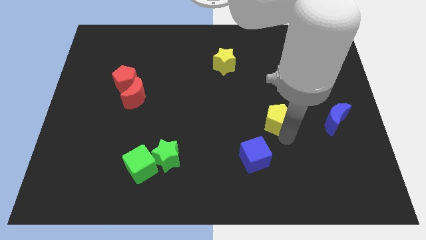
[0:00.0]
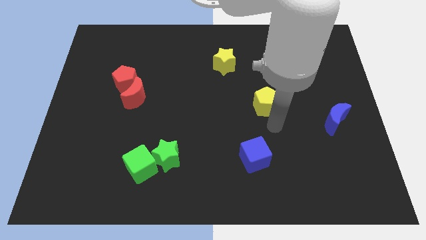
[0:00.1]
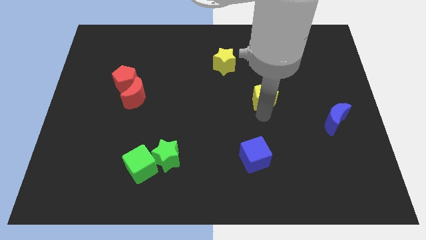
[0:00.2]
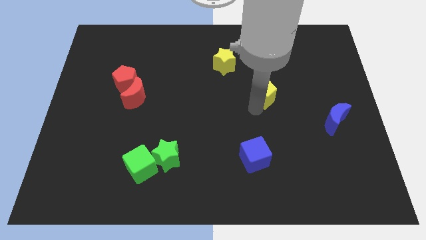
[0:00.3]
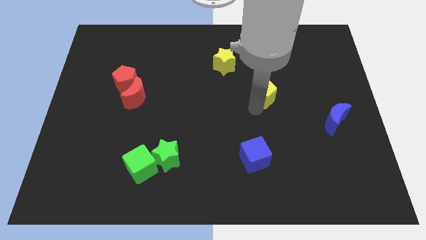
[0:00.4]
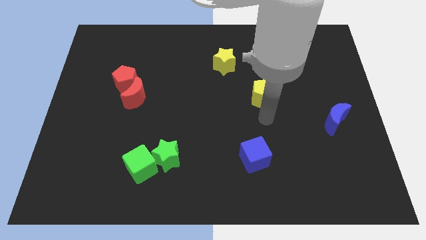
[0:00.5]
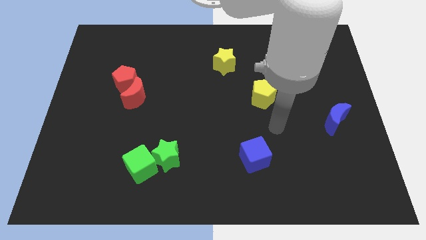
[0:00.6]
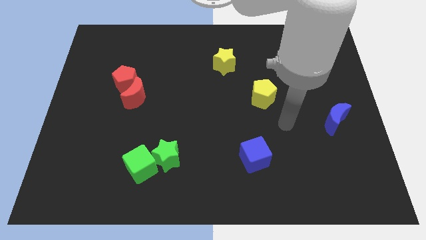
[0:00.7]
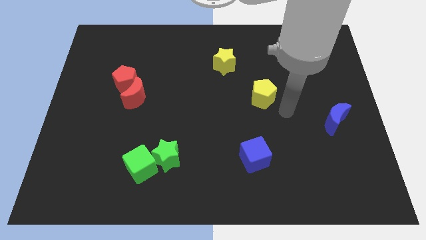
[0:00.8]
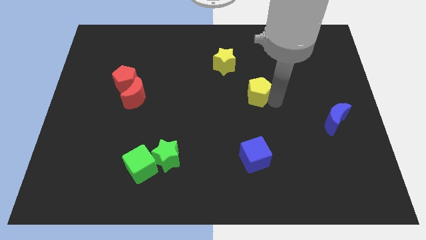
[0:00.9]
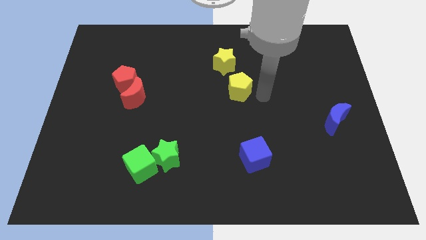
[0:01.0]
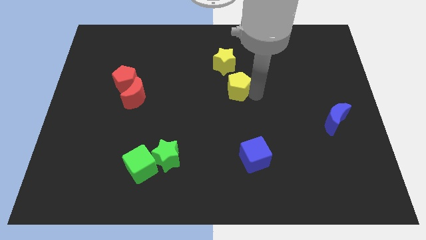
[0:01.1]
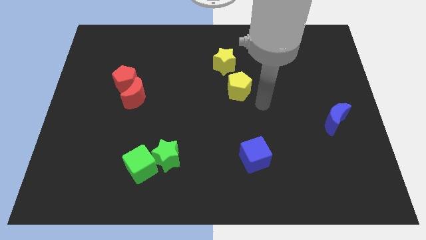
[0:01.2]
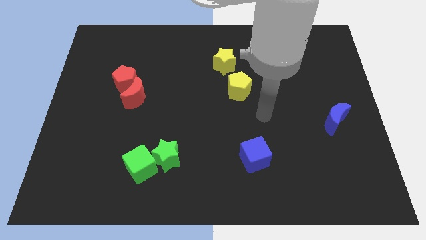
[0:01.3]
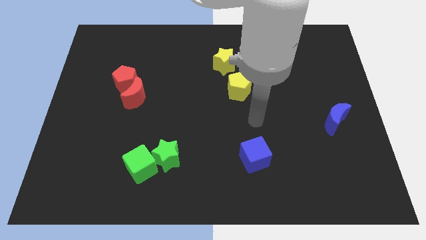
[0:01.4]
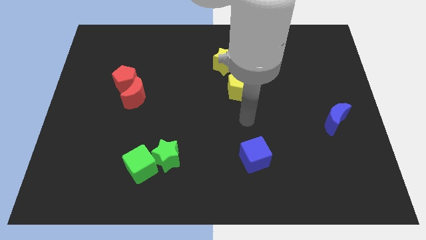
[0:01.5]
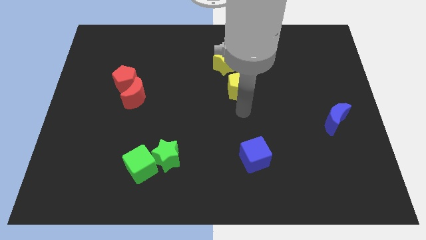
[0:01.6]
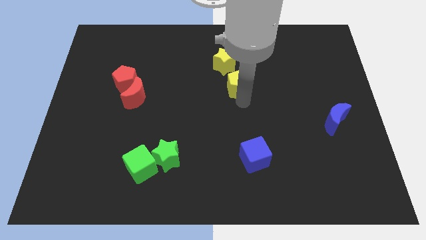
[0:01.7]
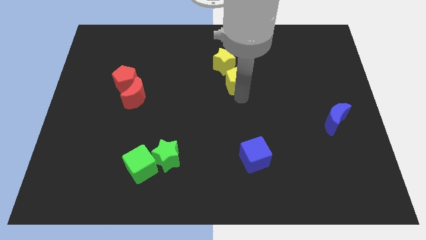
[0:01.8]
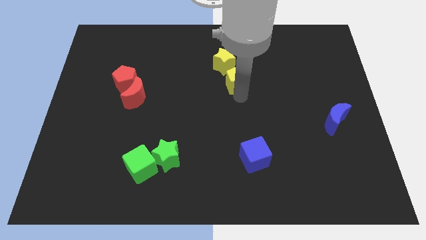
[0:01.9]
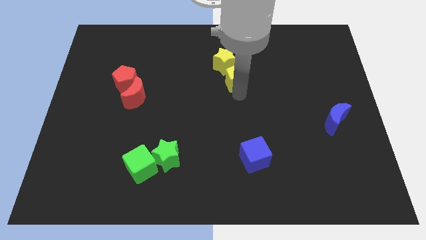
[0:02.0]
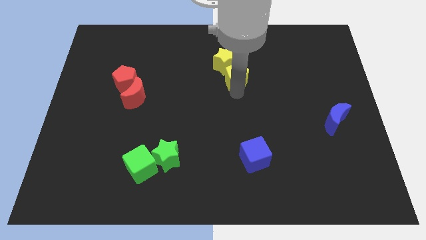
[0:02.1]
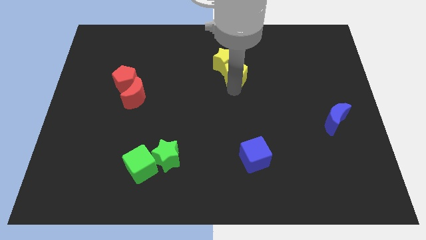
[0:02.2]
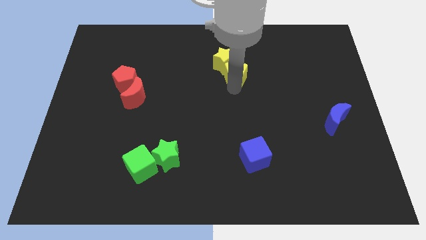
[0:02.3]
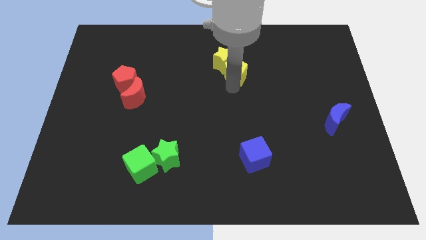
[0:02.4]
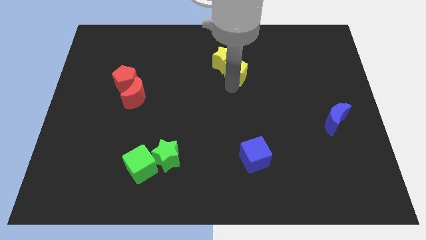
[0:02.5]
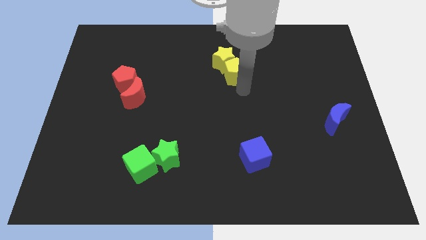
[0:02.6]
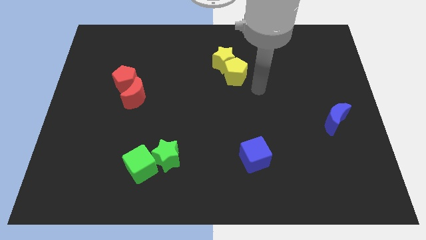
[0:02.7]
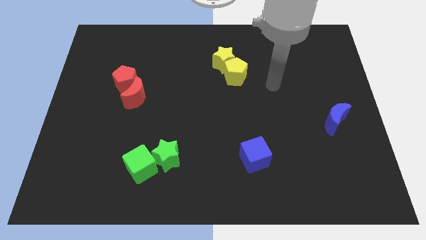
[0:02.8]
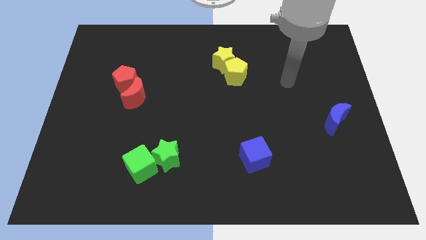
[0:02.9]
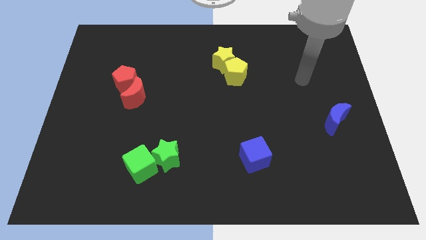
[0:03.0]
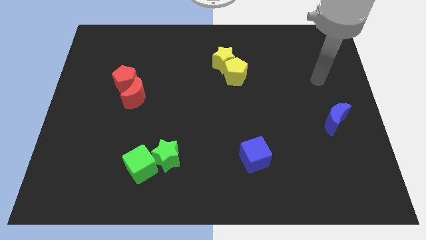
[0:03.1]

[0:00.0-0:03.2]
push the yellow pentagon into the yellow star

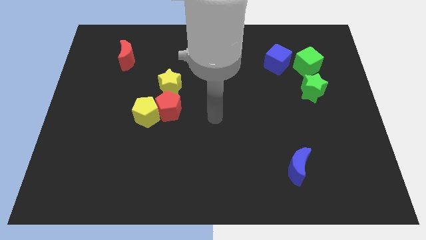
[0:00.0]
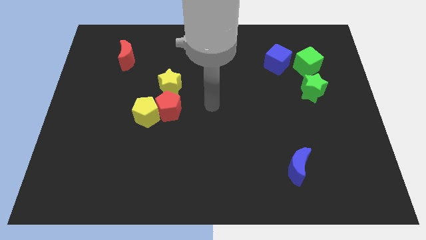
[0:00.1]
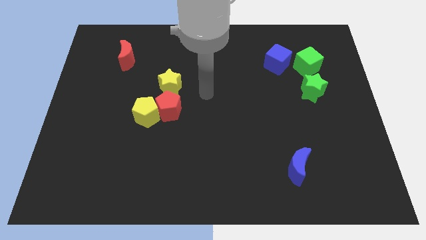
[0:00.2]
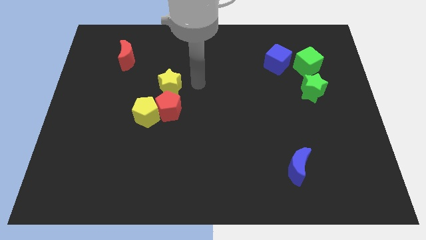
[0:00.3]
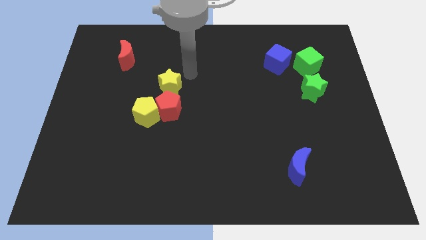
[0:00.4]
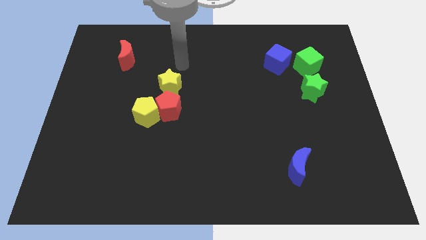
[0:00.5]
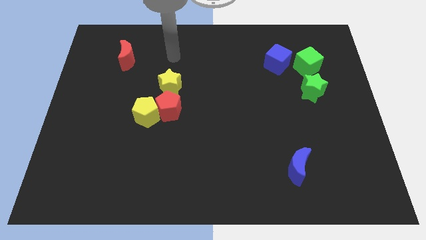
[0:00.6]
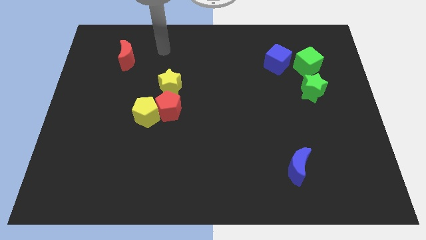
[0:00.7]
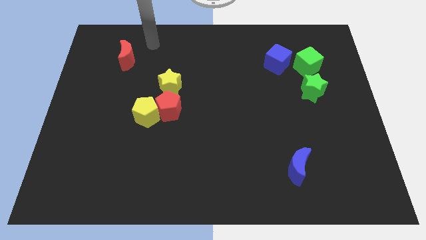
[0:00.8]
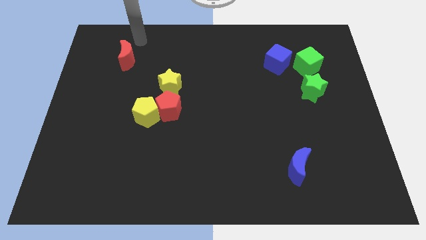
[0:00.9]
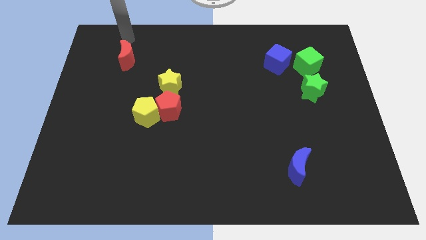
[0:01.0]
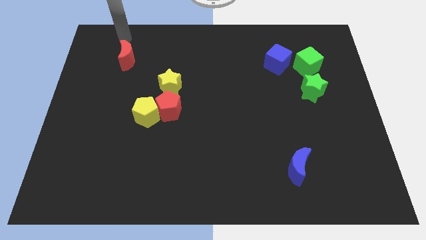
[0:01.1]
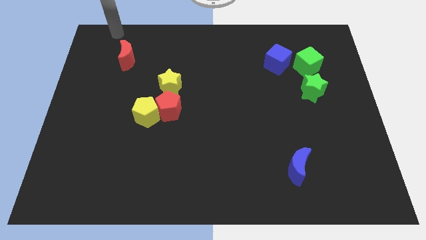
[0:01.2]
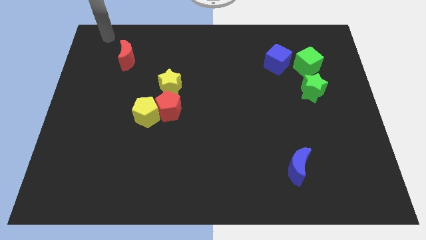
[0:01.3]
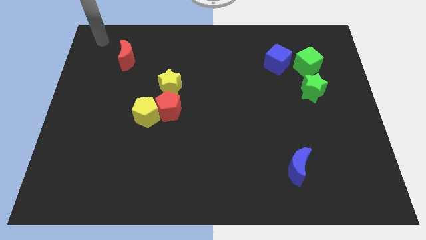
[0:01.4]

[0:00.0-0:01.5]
move your arm towards red moon

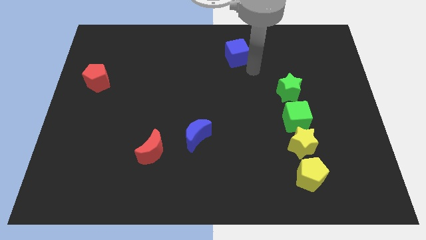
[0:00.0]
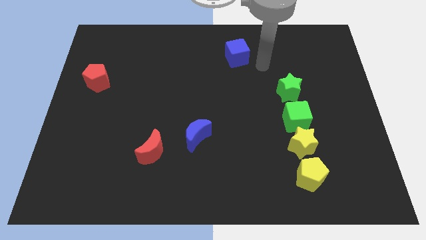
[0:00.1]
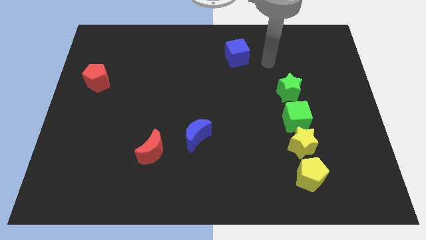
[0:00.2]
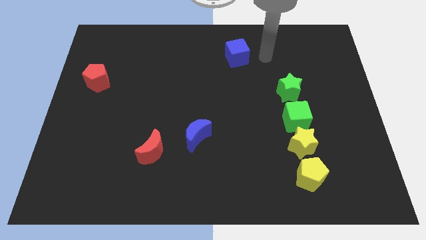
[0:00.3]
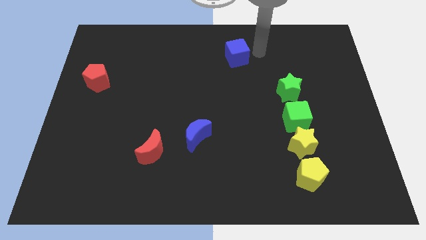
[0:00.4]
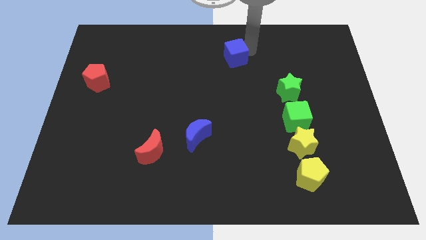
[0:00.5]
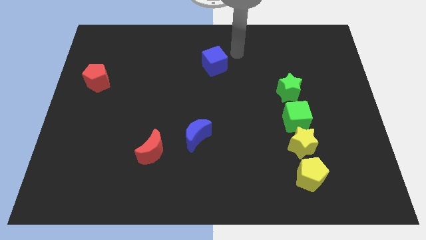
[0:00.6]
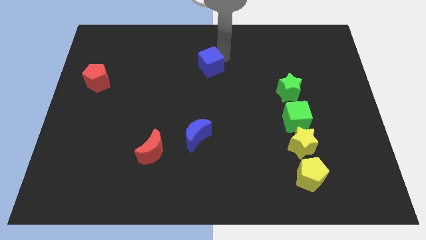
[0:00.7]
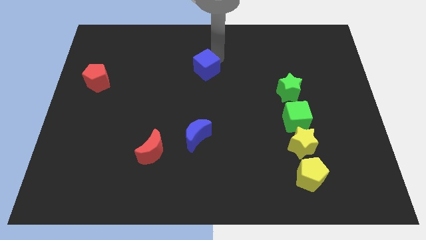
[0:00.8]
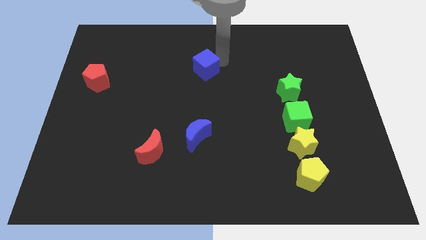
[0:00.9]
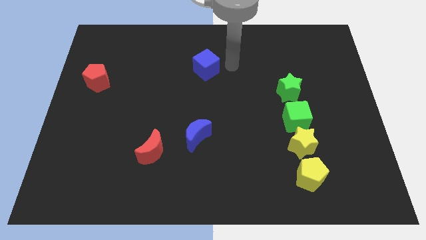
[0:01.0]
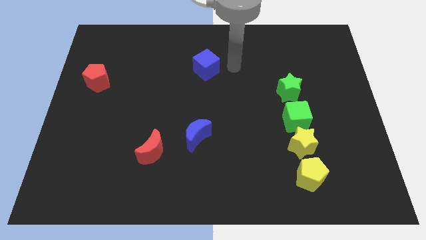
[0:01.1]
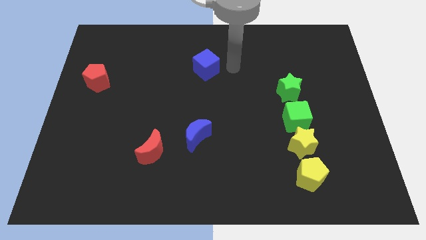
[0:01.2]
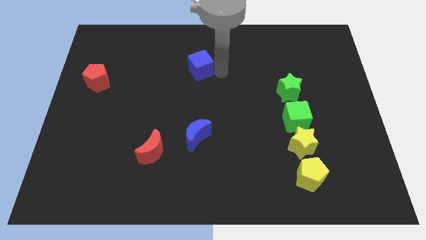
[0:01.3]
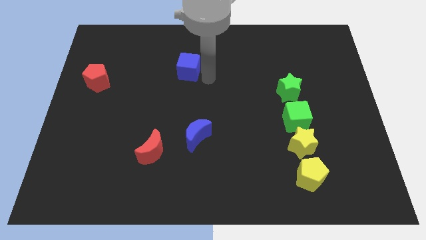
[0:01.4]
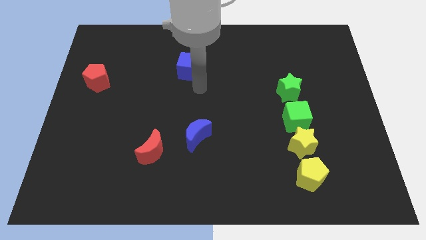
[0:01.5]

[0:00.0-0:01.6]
move the blue cube vertically to the blue moon

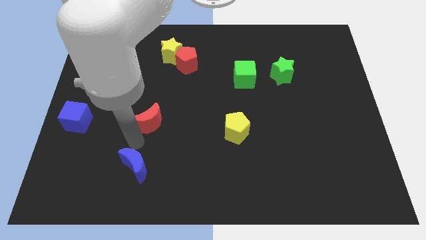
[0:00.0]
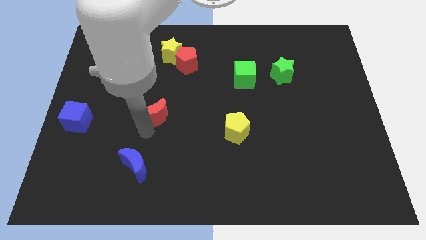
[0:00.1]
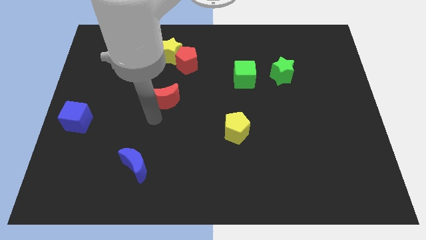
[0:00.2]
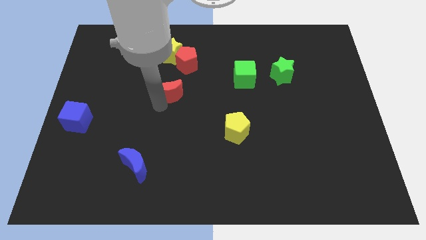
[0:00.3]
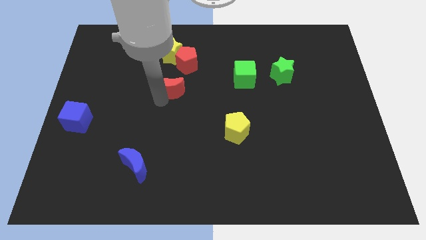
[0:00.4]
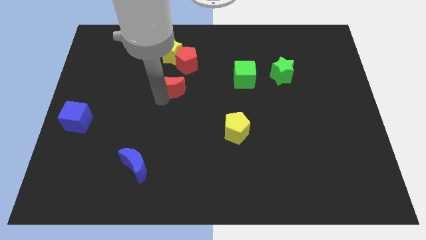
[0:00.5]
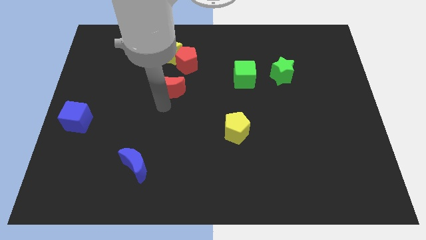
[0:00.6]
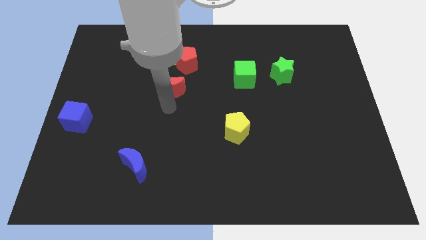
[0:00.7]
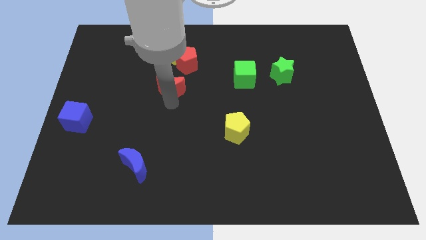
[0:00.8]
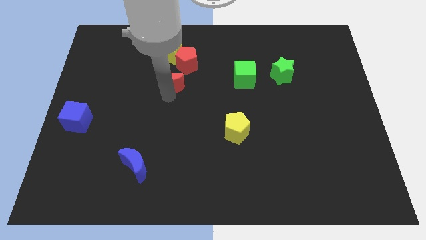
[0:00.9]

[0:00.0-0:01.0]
place the red crescent below the red pentagon

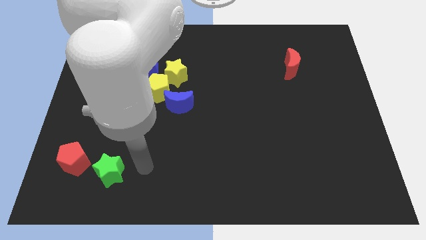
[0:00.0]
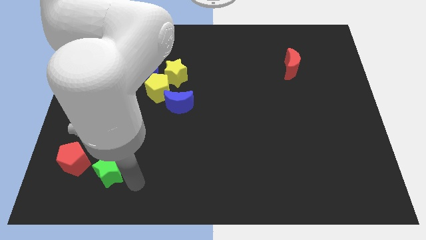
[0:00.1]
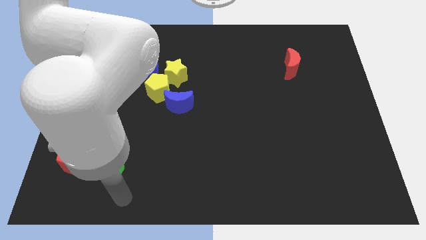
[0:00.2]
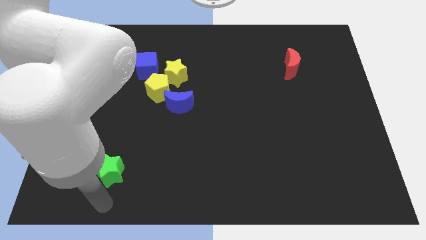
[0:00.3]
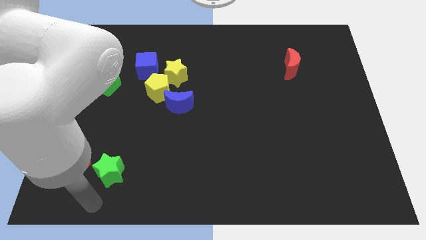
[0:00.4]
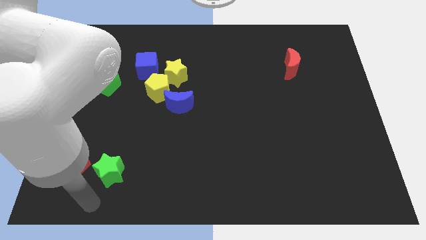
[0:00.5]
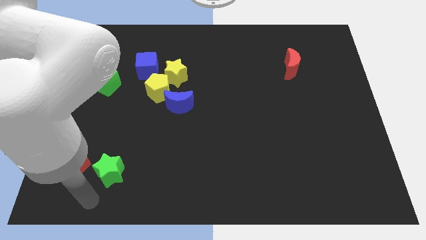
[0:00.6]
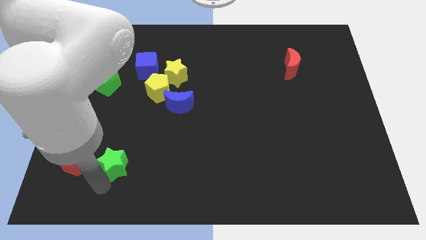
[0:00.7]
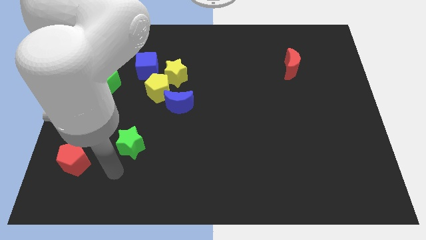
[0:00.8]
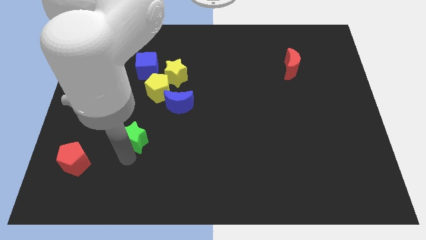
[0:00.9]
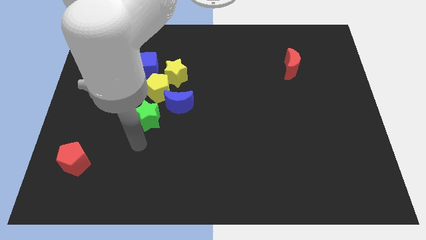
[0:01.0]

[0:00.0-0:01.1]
push the green star towards the yellow pentagon

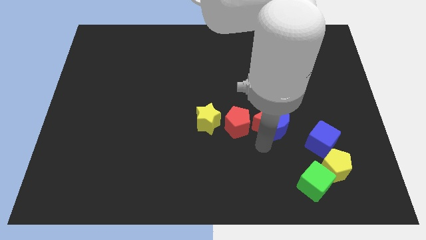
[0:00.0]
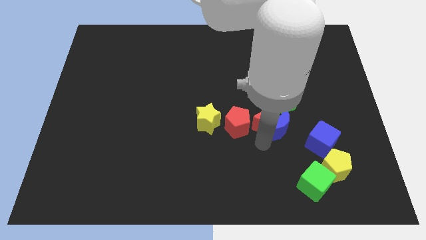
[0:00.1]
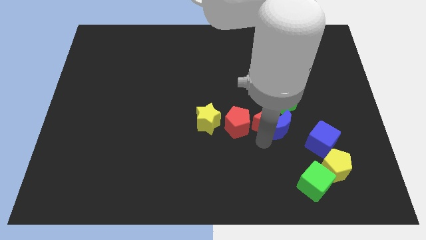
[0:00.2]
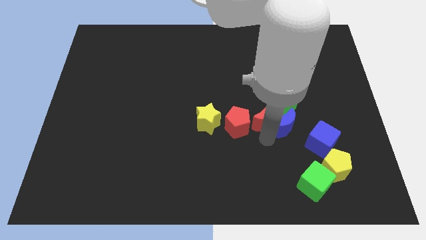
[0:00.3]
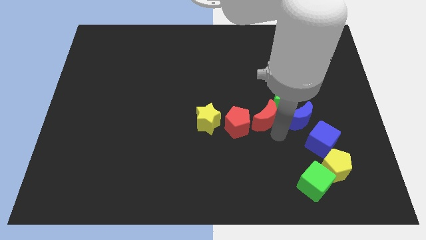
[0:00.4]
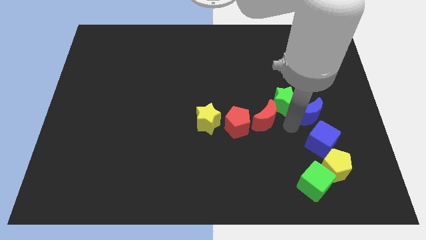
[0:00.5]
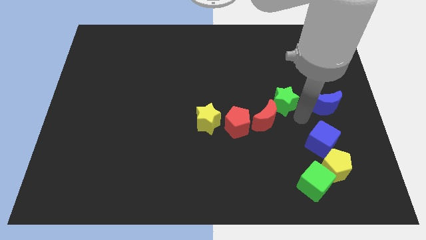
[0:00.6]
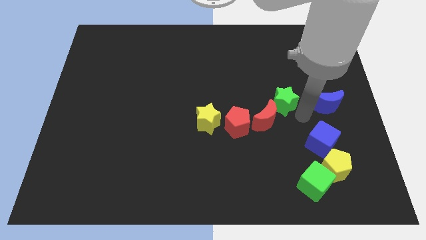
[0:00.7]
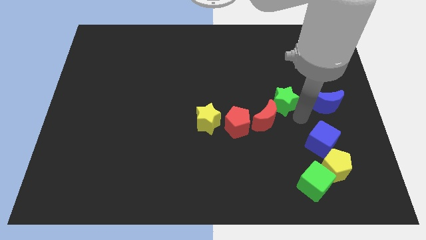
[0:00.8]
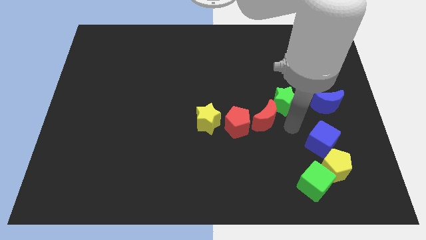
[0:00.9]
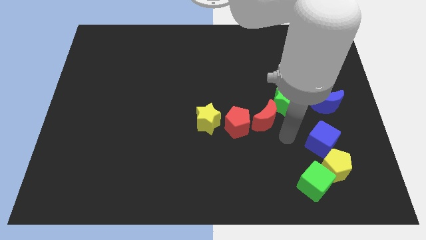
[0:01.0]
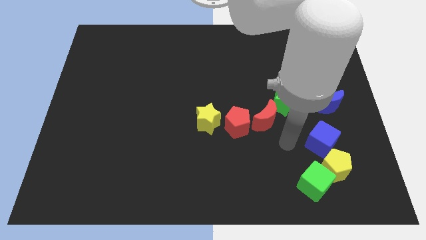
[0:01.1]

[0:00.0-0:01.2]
separate the blue moon from the red moon
